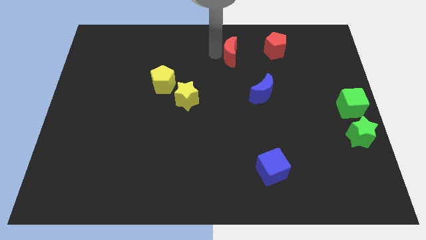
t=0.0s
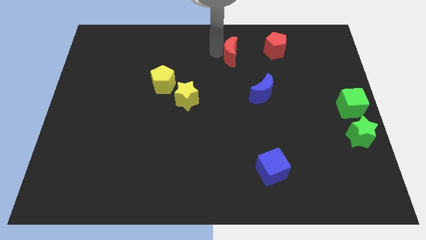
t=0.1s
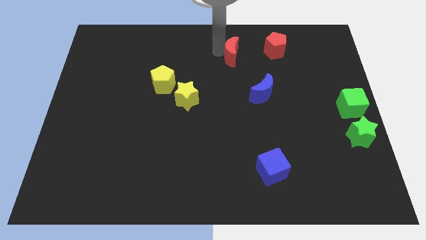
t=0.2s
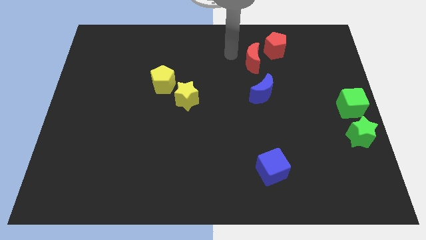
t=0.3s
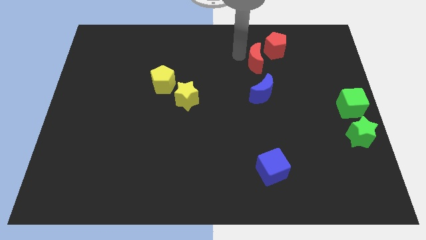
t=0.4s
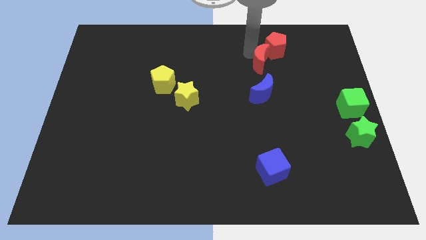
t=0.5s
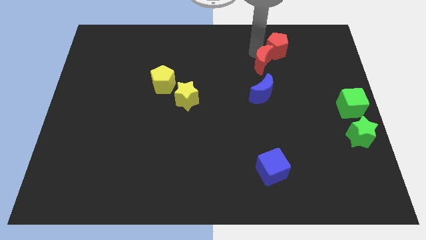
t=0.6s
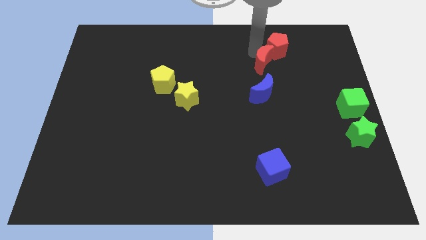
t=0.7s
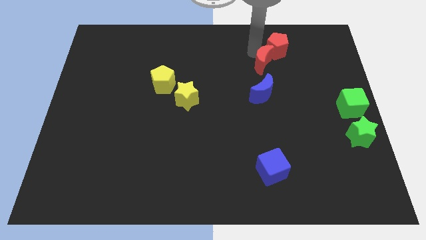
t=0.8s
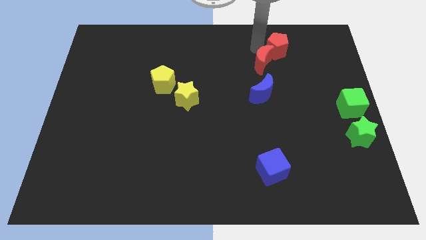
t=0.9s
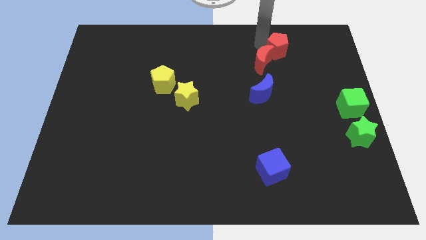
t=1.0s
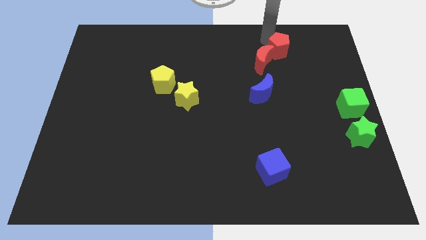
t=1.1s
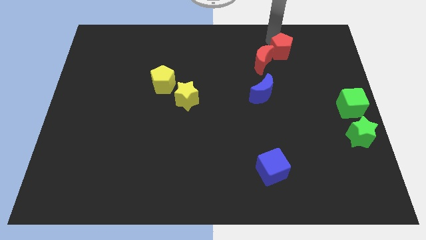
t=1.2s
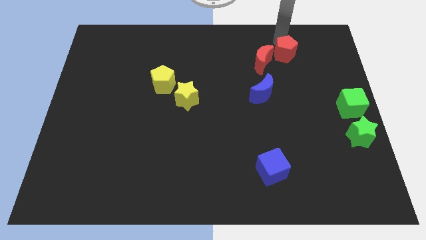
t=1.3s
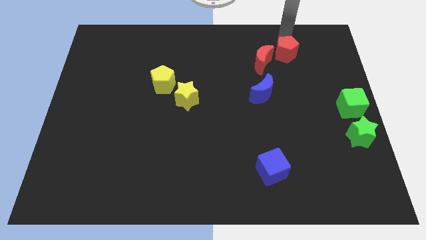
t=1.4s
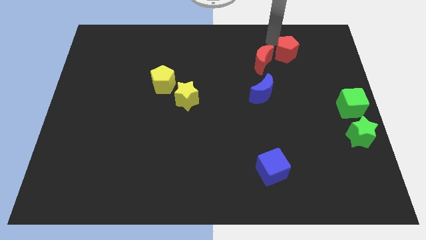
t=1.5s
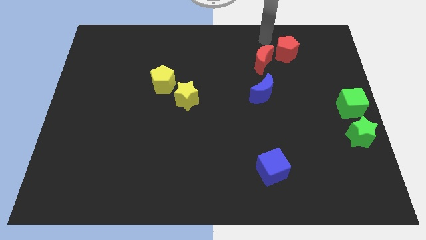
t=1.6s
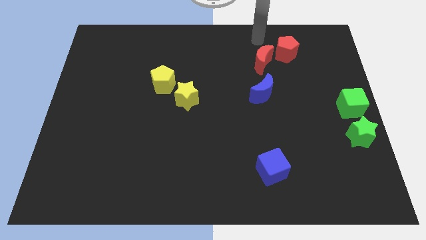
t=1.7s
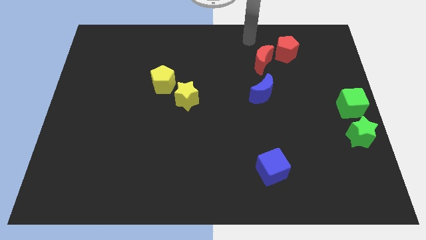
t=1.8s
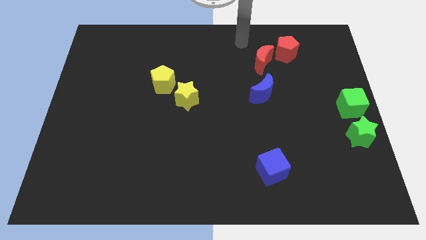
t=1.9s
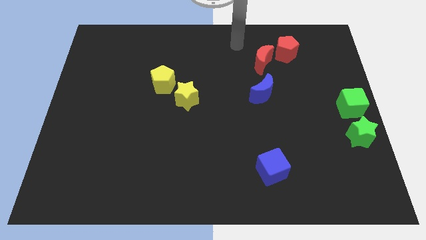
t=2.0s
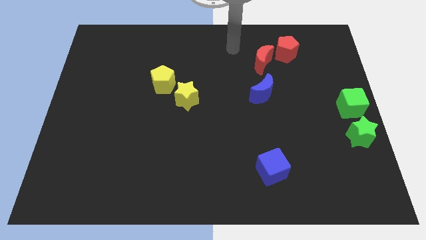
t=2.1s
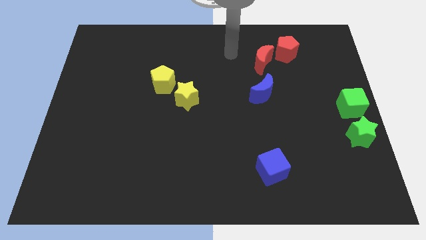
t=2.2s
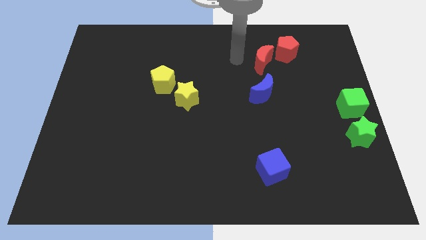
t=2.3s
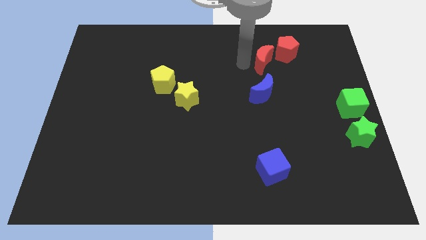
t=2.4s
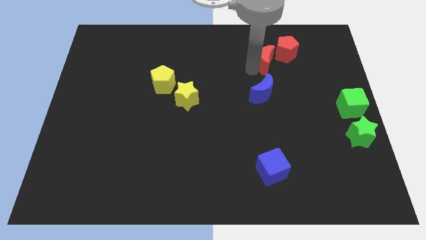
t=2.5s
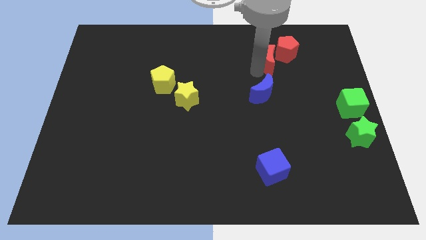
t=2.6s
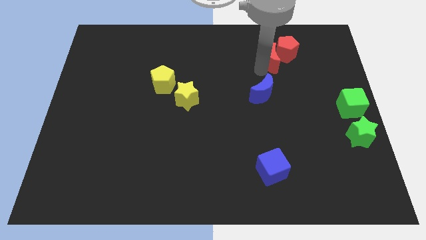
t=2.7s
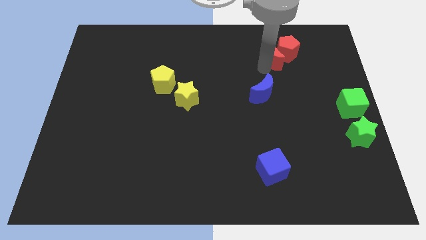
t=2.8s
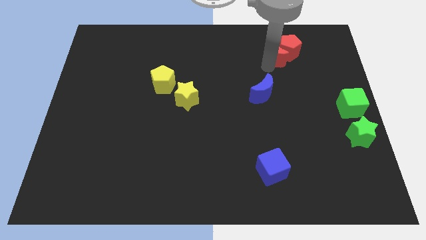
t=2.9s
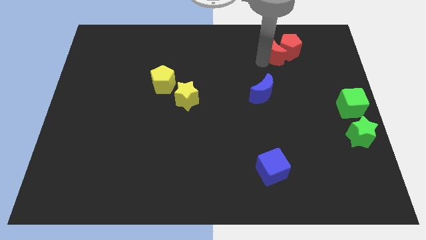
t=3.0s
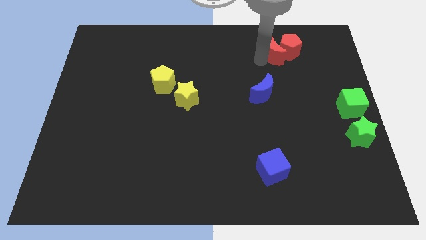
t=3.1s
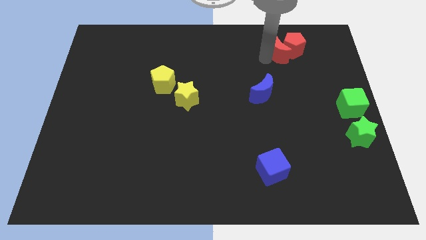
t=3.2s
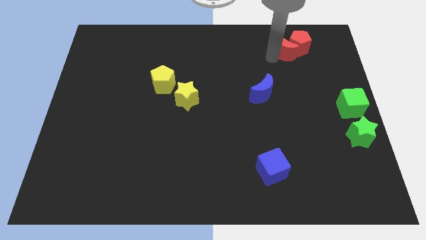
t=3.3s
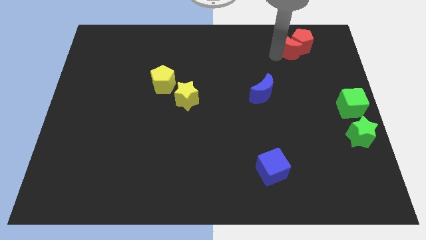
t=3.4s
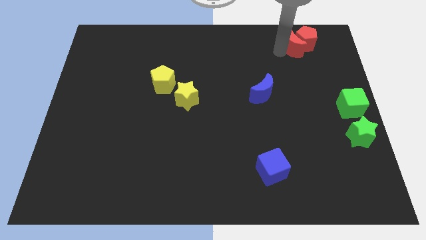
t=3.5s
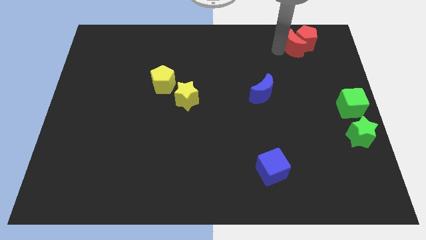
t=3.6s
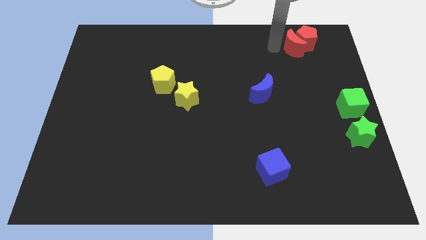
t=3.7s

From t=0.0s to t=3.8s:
push red moon in to red pentagon

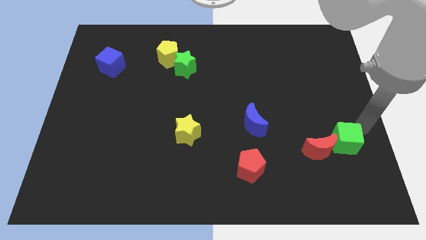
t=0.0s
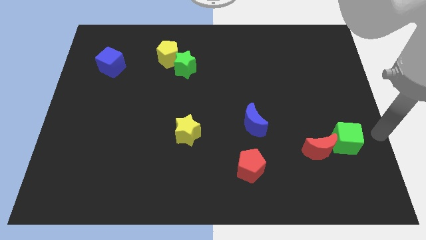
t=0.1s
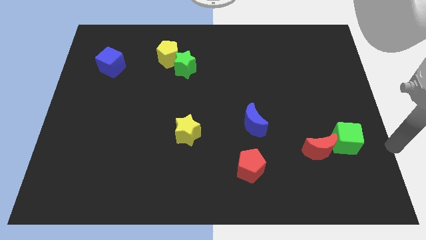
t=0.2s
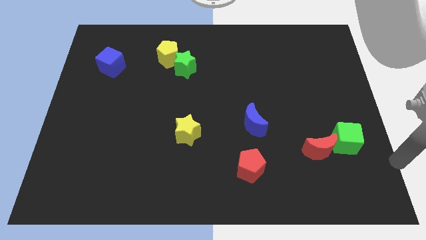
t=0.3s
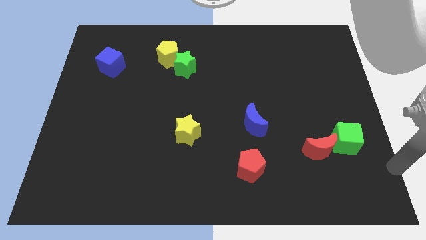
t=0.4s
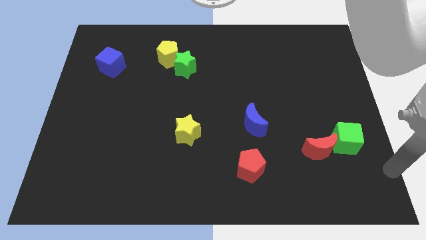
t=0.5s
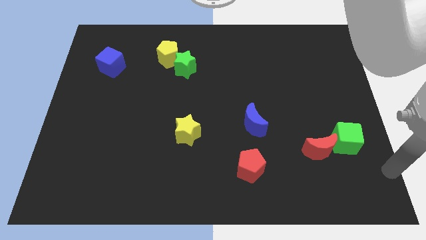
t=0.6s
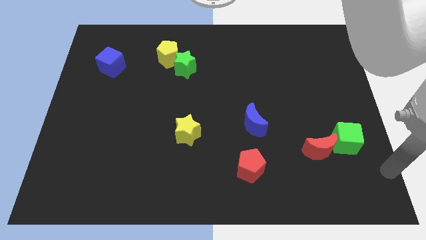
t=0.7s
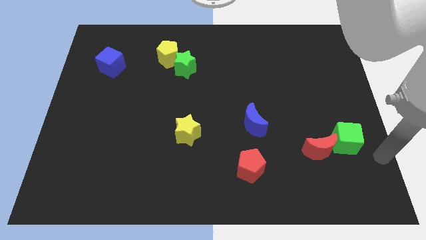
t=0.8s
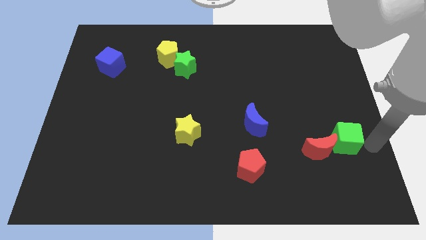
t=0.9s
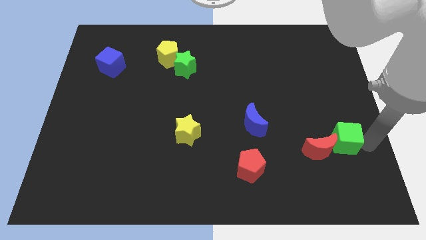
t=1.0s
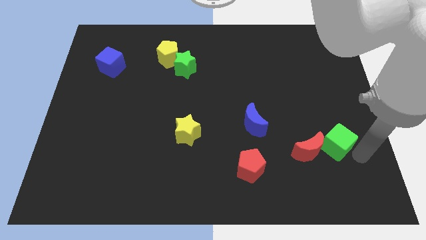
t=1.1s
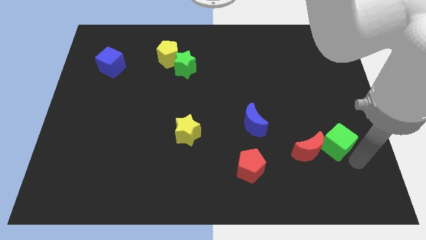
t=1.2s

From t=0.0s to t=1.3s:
push the red crescent with the green cube slightly towards the bottom center of the board

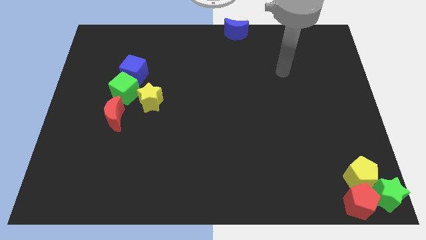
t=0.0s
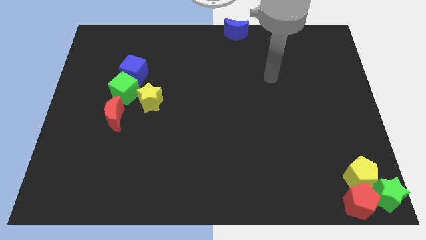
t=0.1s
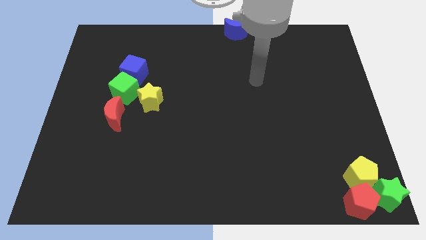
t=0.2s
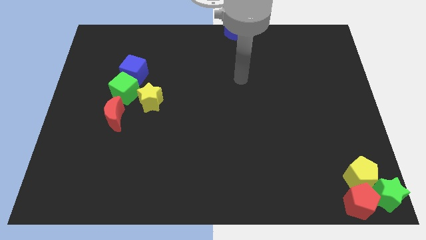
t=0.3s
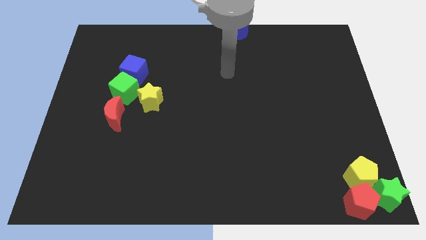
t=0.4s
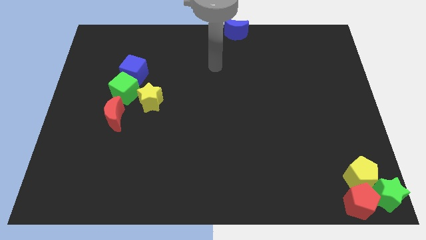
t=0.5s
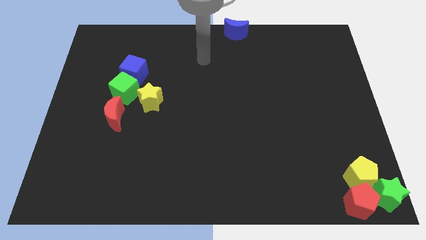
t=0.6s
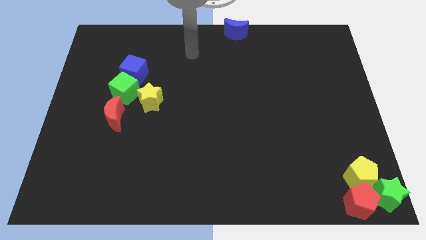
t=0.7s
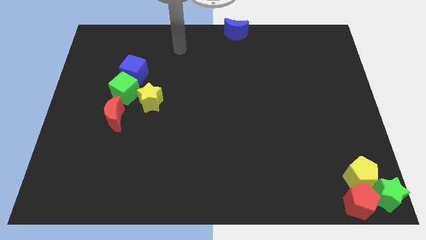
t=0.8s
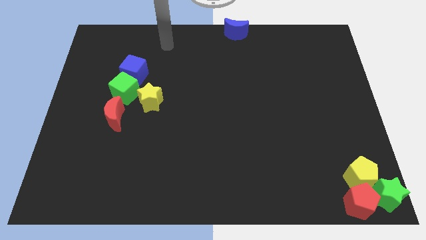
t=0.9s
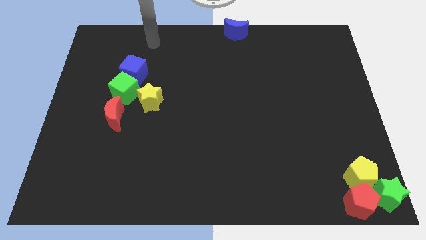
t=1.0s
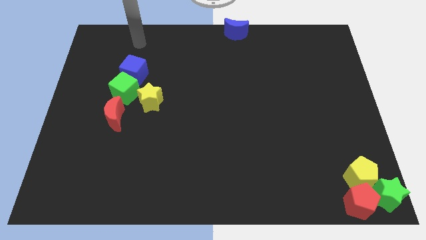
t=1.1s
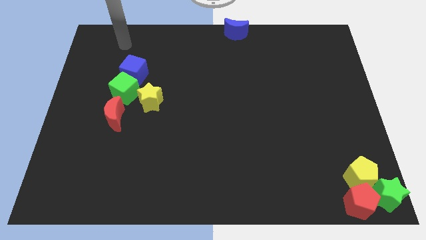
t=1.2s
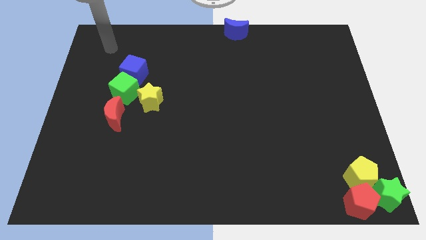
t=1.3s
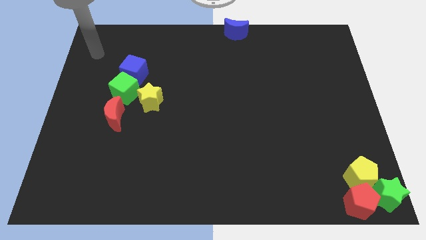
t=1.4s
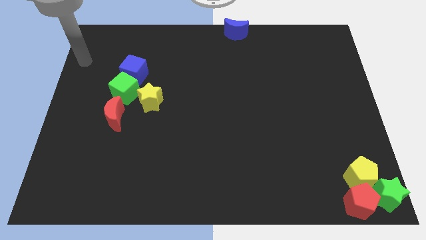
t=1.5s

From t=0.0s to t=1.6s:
place your arm to the top left of the board

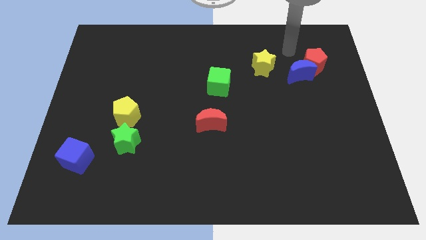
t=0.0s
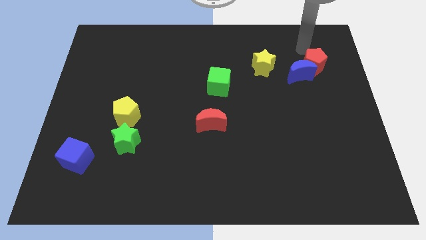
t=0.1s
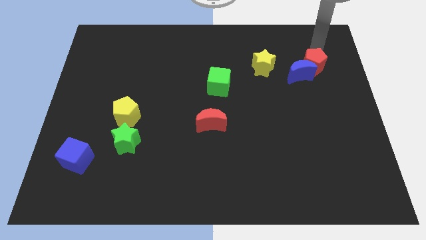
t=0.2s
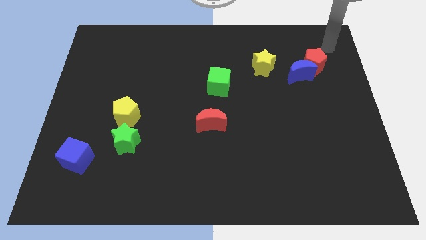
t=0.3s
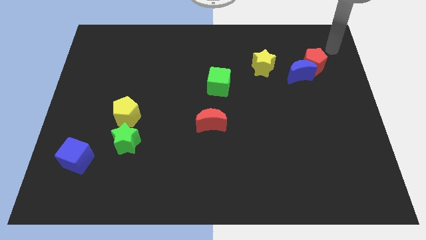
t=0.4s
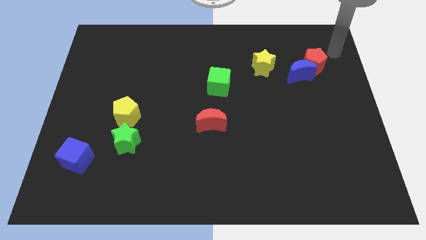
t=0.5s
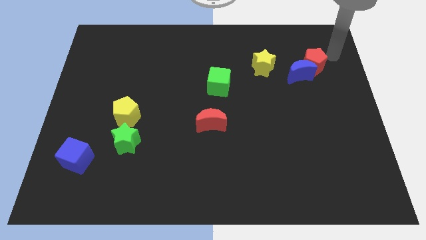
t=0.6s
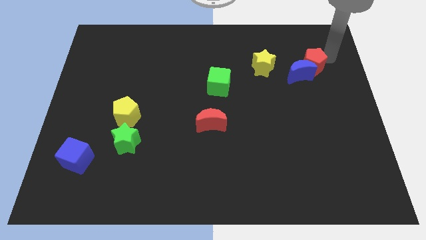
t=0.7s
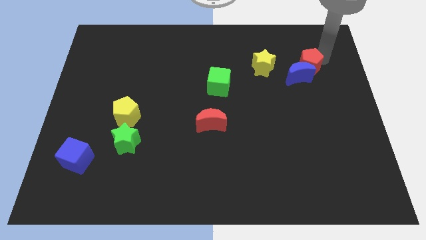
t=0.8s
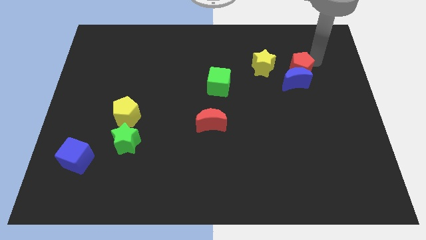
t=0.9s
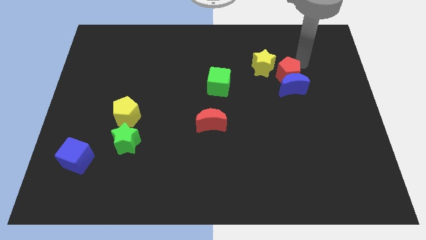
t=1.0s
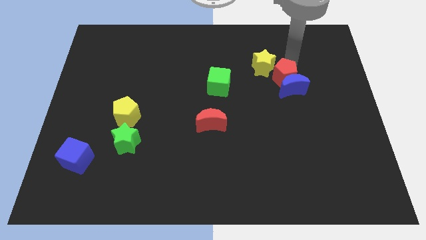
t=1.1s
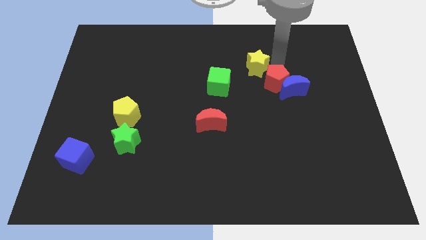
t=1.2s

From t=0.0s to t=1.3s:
push the red pentagon into the blue moon

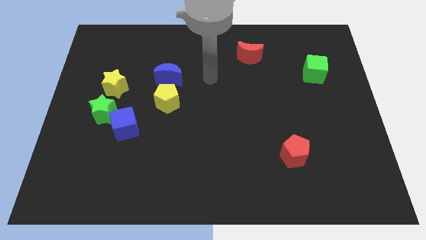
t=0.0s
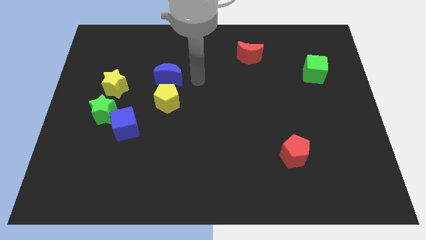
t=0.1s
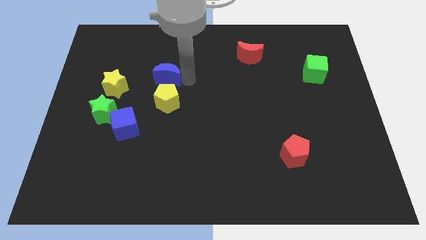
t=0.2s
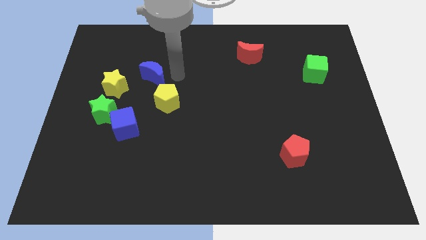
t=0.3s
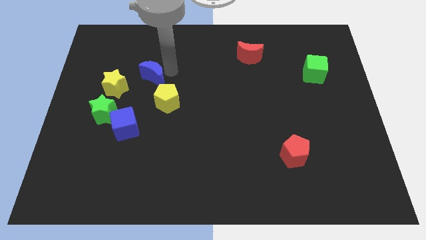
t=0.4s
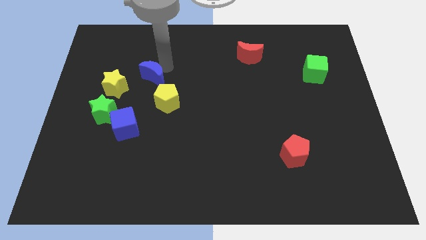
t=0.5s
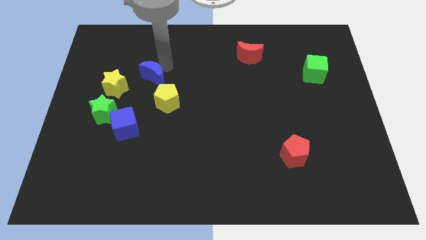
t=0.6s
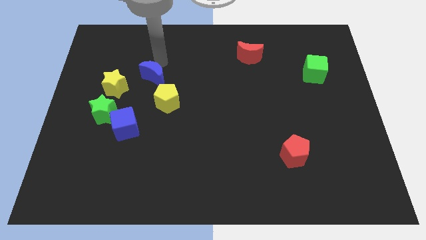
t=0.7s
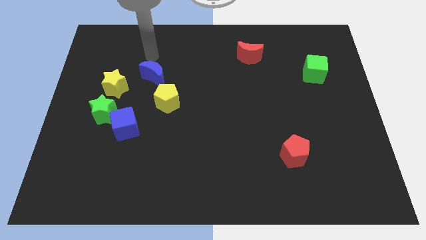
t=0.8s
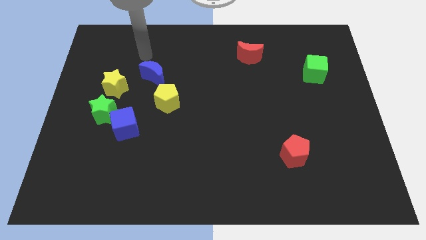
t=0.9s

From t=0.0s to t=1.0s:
slide the blue moon diagonally top left to the yellow pentagon
